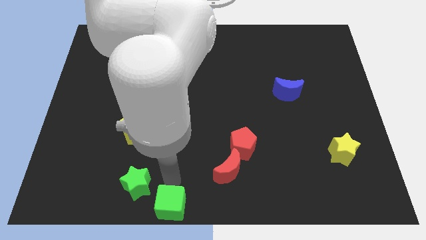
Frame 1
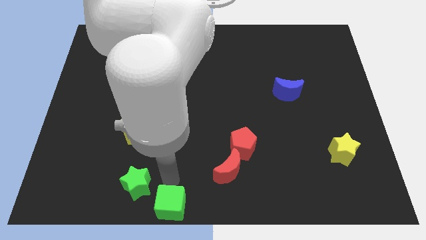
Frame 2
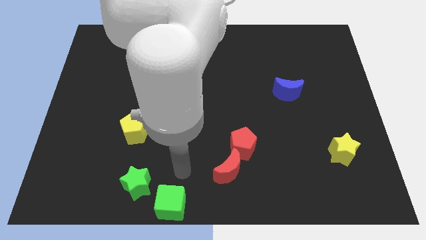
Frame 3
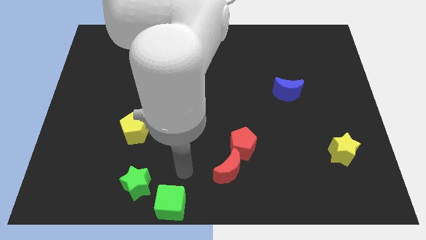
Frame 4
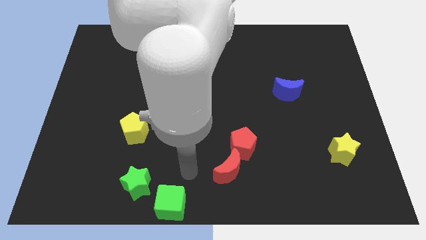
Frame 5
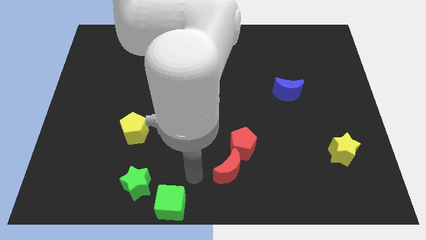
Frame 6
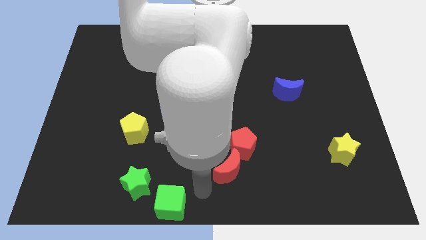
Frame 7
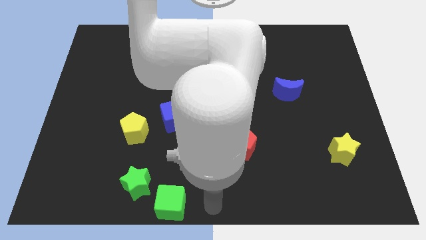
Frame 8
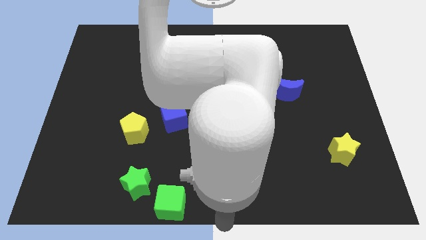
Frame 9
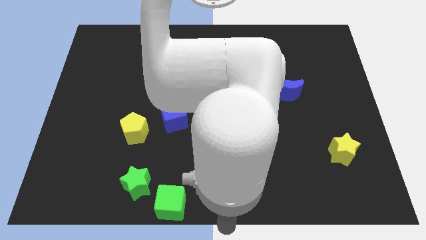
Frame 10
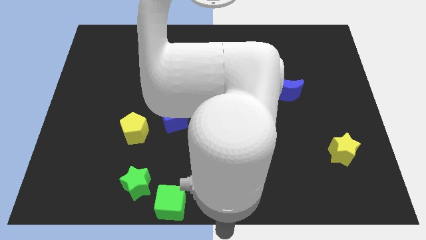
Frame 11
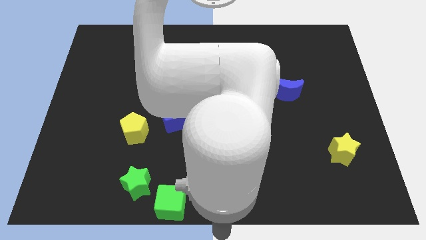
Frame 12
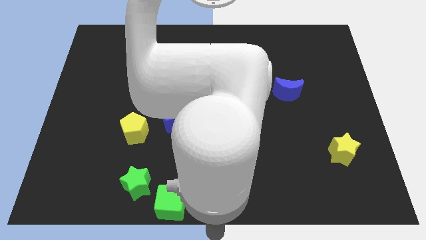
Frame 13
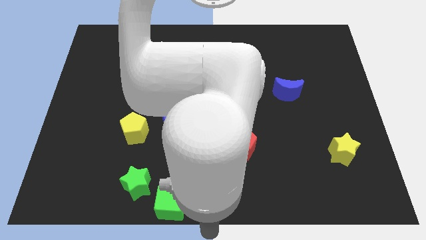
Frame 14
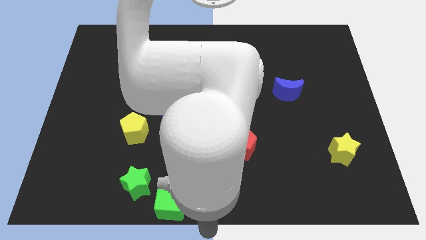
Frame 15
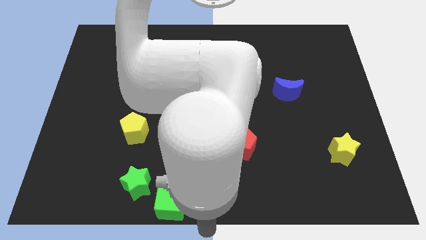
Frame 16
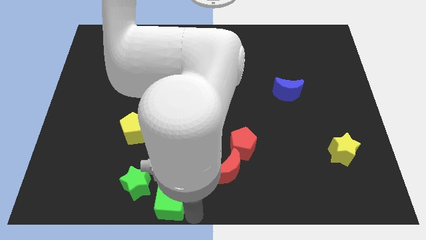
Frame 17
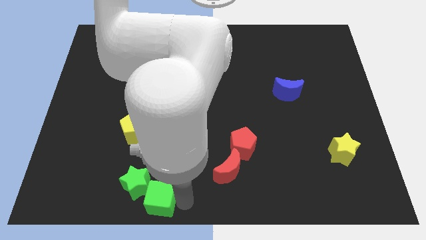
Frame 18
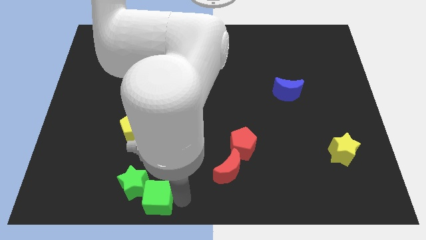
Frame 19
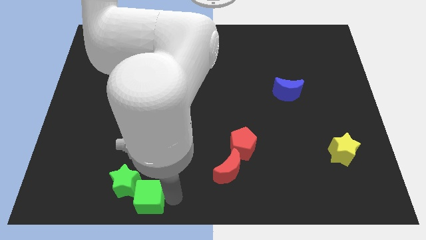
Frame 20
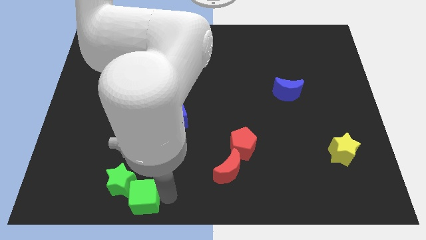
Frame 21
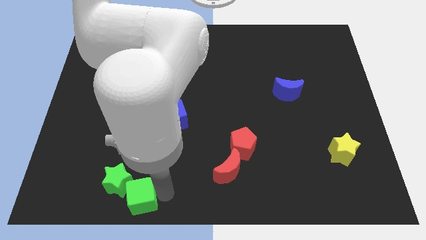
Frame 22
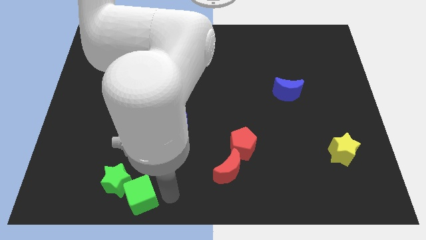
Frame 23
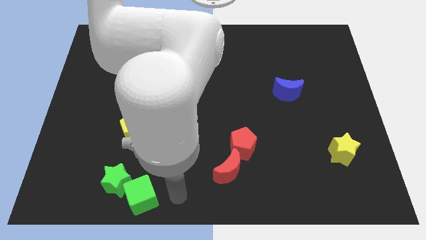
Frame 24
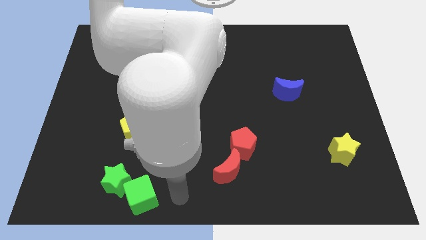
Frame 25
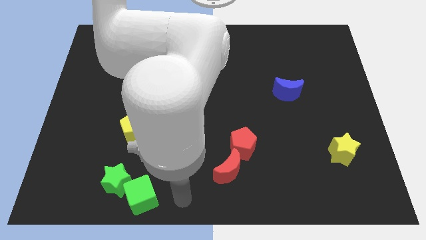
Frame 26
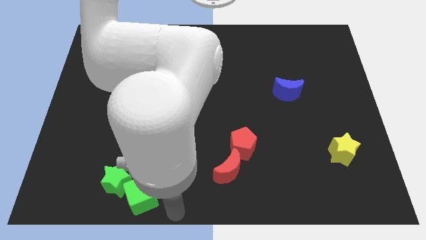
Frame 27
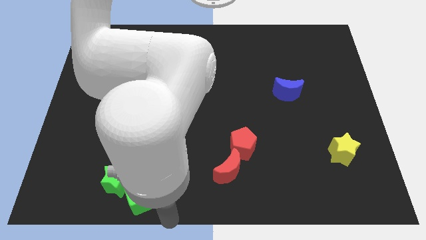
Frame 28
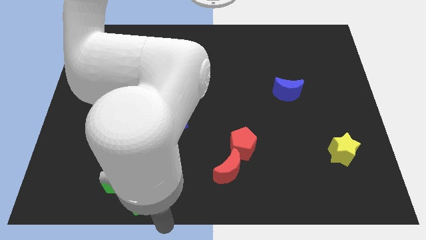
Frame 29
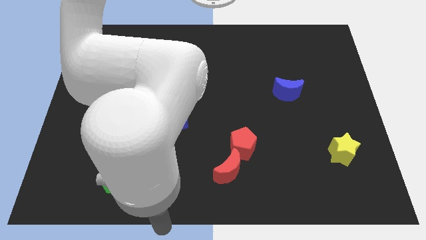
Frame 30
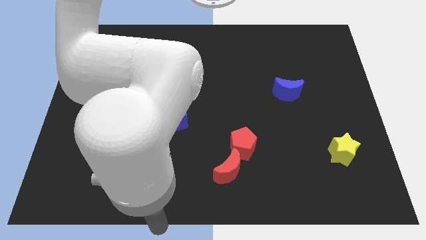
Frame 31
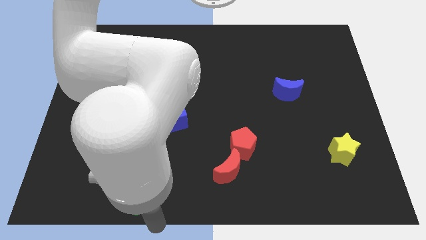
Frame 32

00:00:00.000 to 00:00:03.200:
push the green cube into the green star

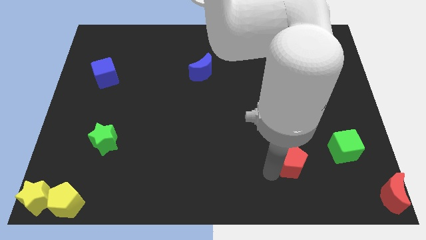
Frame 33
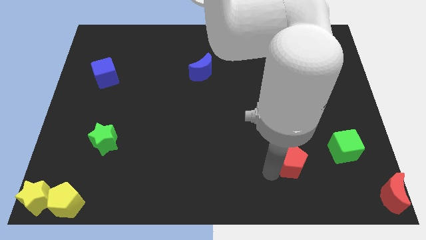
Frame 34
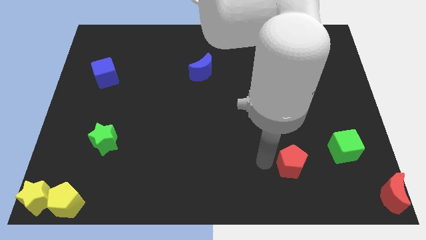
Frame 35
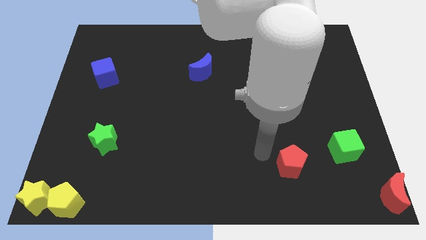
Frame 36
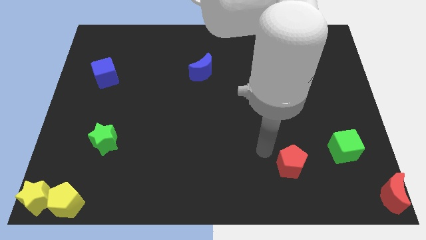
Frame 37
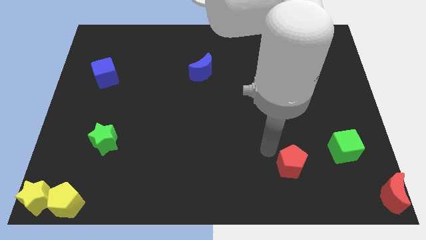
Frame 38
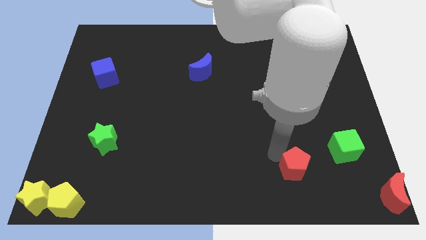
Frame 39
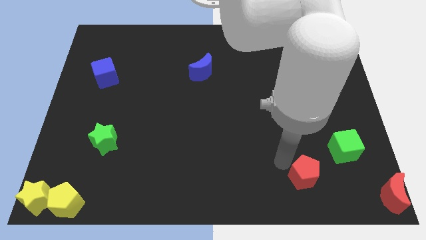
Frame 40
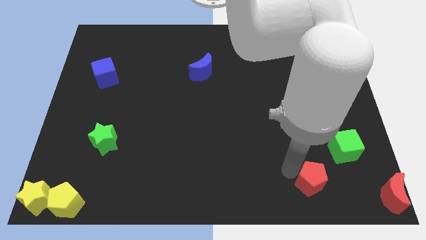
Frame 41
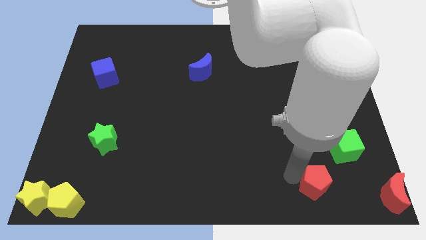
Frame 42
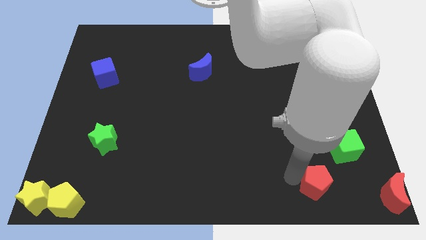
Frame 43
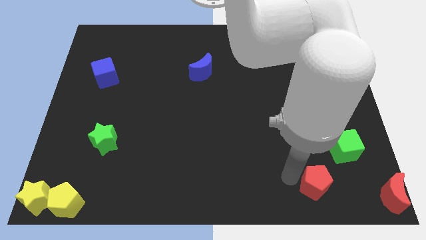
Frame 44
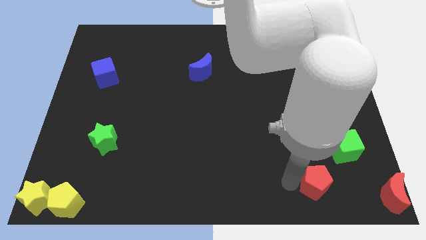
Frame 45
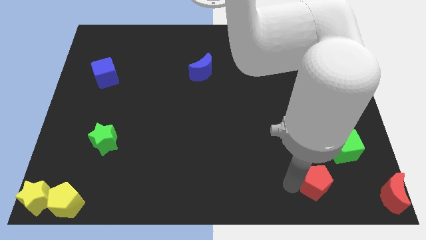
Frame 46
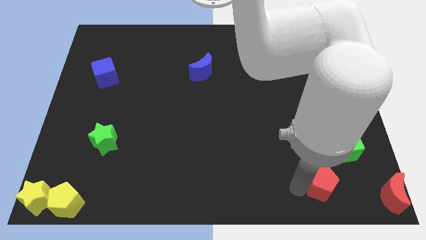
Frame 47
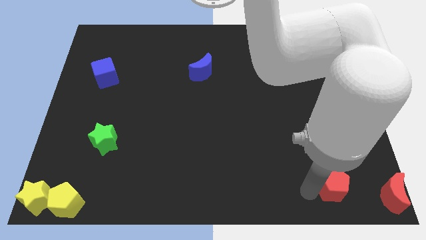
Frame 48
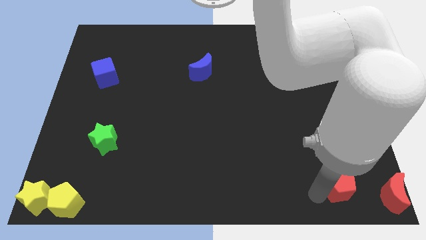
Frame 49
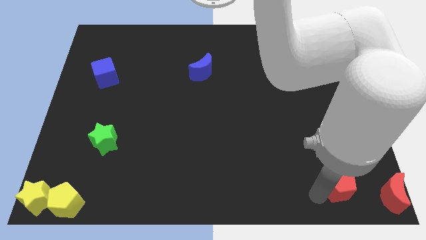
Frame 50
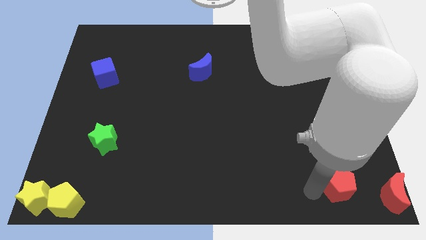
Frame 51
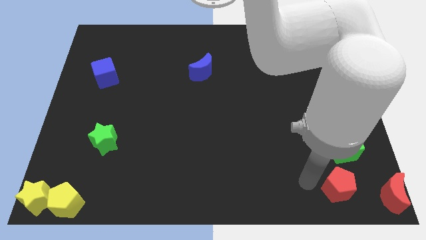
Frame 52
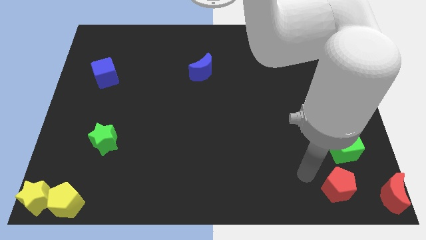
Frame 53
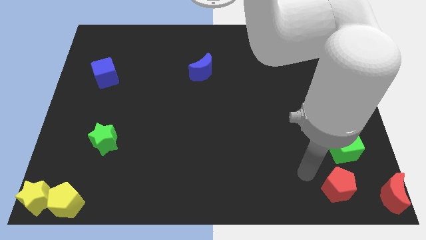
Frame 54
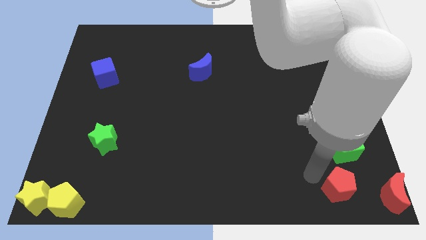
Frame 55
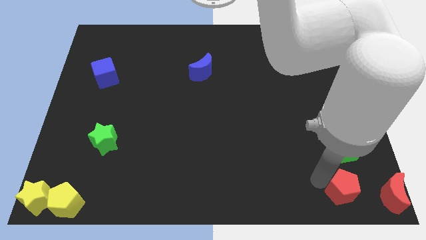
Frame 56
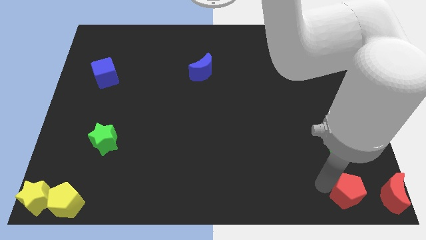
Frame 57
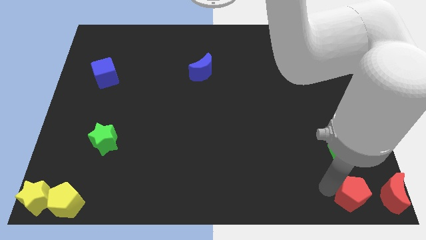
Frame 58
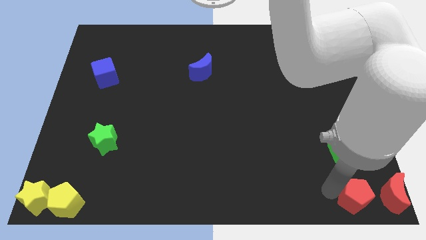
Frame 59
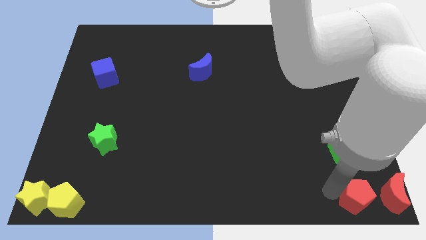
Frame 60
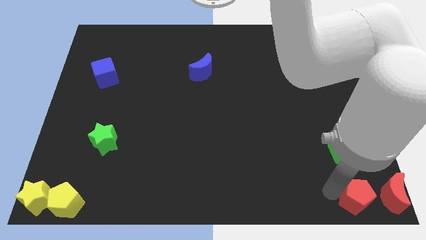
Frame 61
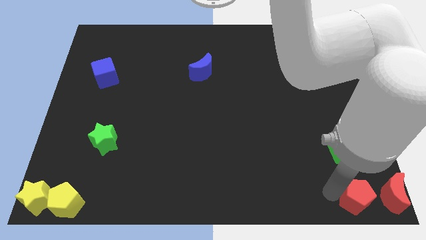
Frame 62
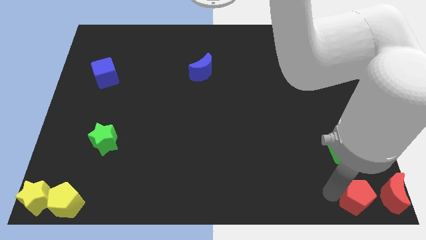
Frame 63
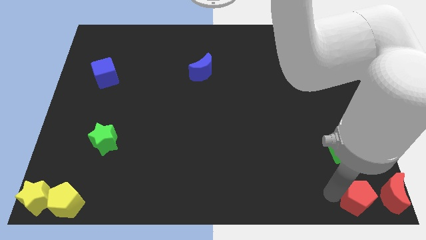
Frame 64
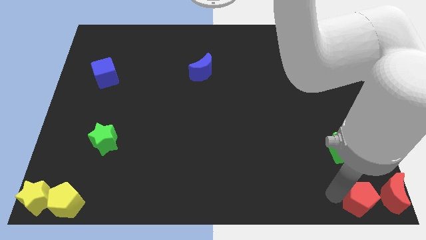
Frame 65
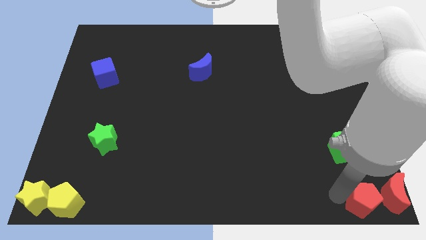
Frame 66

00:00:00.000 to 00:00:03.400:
move the red pentagon left to the red crescent

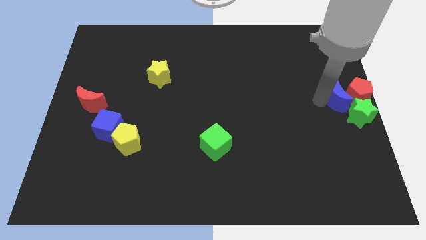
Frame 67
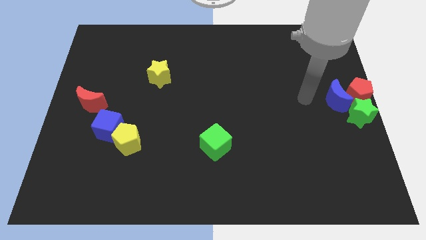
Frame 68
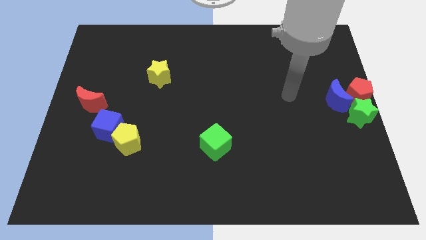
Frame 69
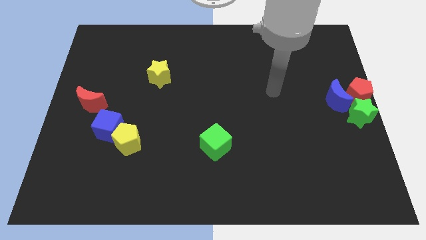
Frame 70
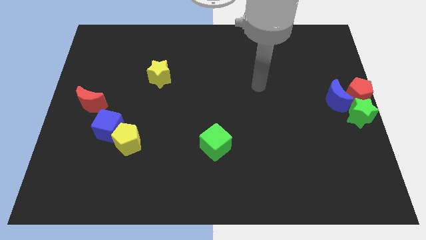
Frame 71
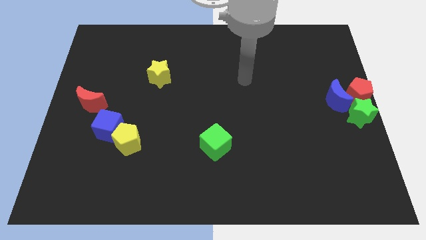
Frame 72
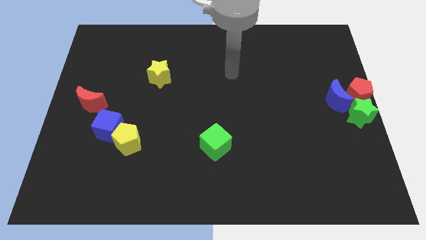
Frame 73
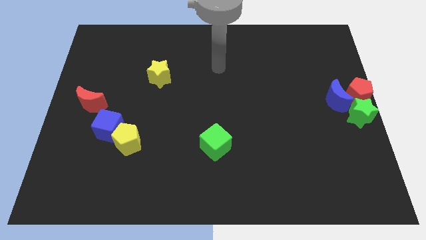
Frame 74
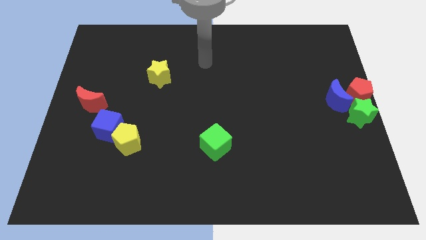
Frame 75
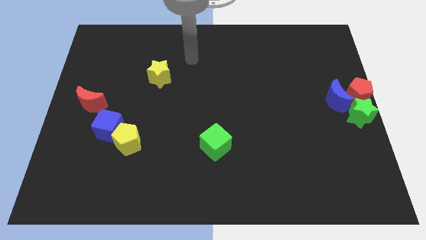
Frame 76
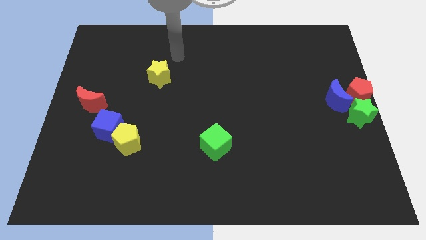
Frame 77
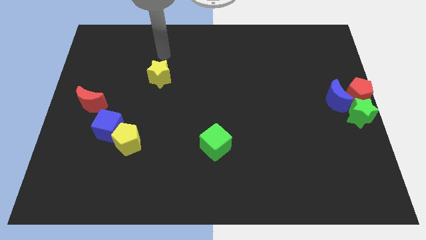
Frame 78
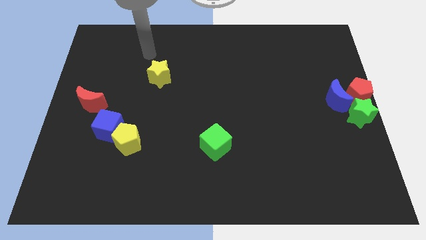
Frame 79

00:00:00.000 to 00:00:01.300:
point your arm at the top of the yellow star

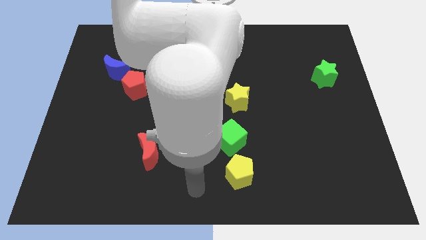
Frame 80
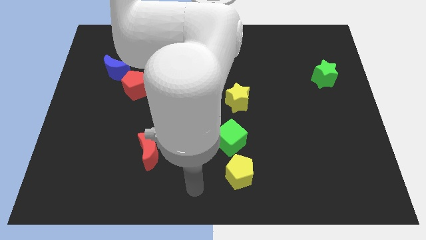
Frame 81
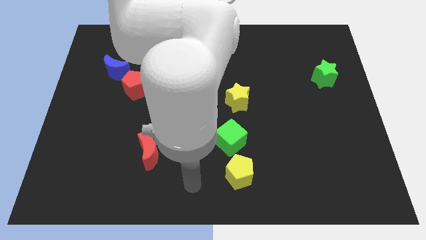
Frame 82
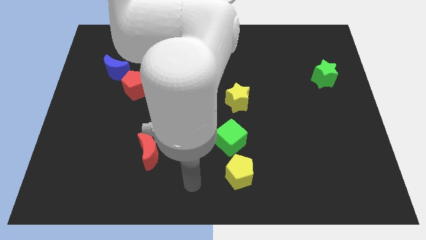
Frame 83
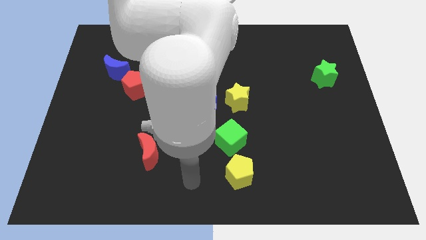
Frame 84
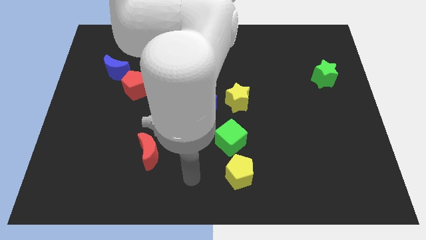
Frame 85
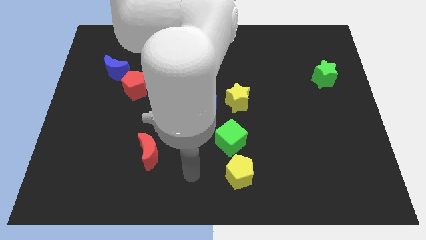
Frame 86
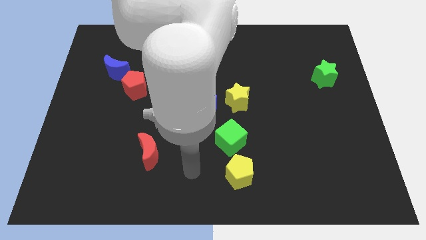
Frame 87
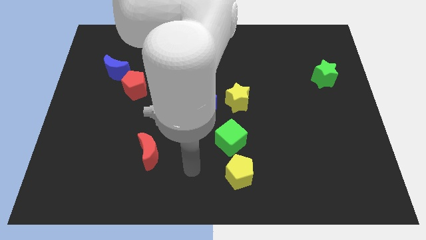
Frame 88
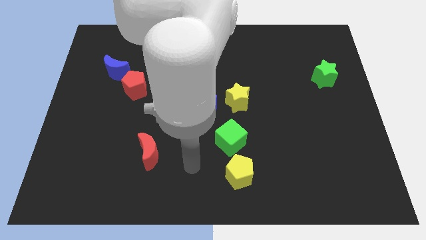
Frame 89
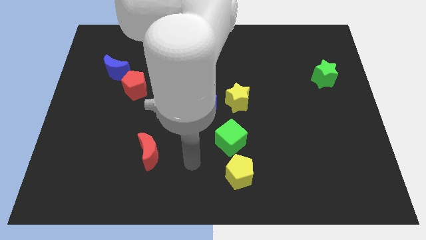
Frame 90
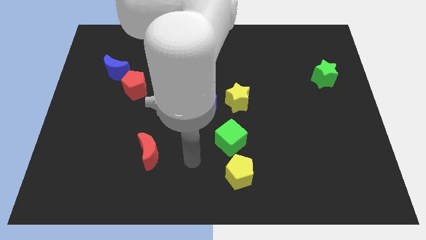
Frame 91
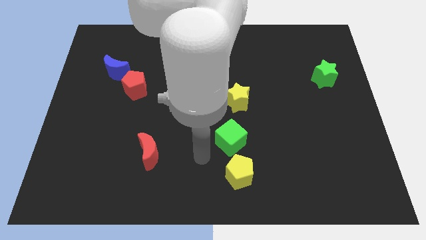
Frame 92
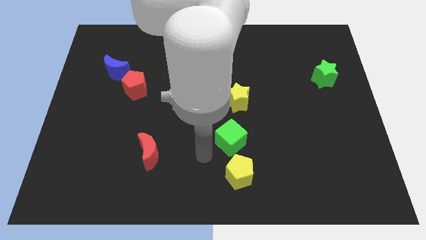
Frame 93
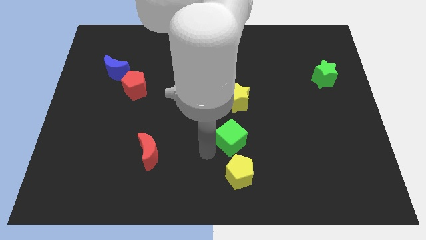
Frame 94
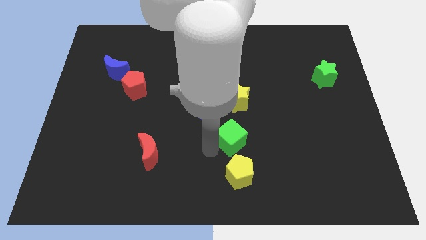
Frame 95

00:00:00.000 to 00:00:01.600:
move your arm towards the left of green cube
